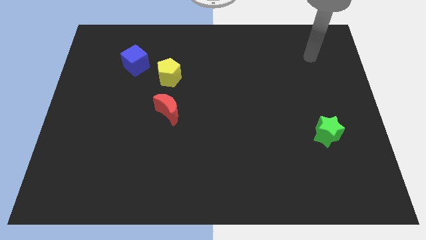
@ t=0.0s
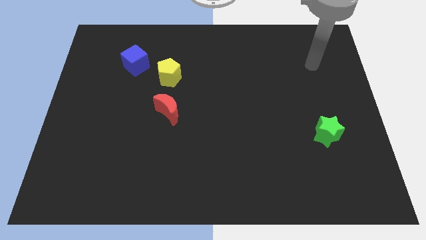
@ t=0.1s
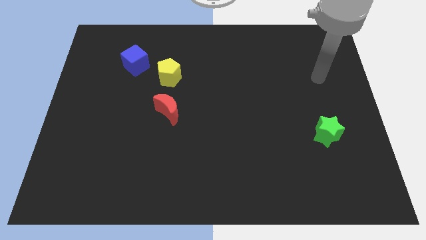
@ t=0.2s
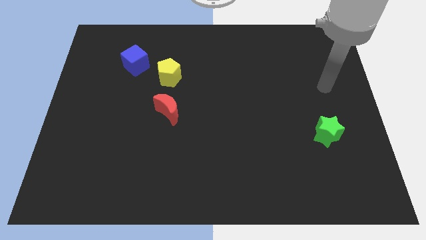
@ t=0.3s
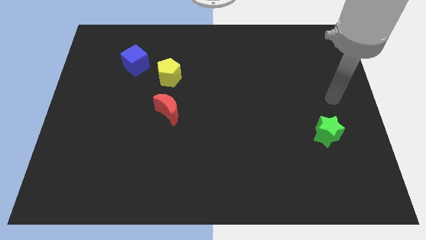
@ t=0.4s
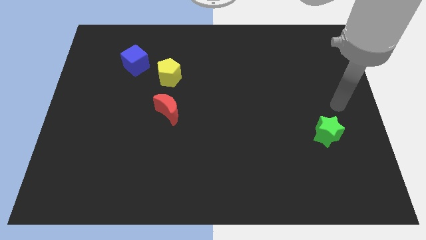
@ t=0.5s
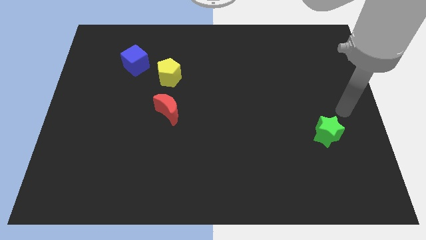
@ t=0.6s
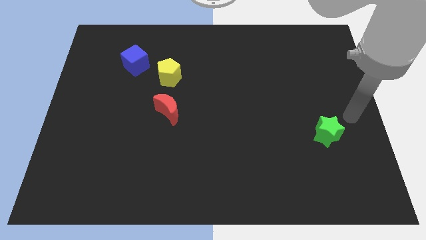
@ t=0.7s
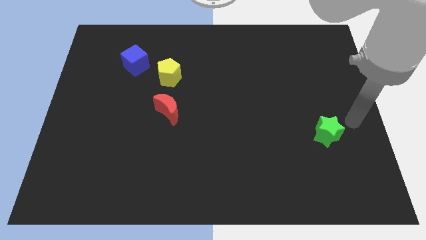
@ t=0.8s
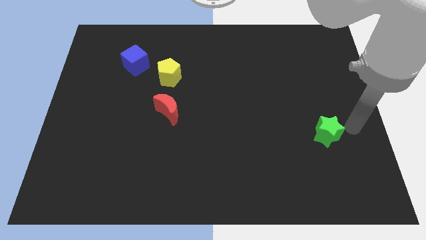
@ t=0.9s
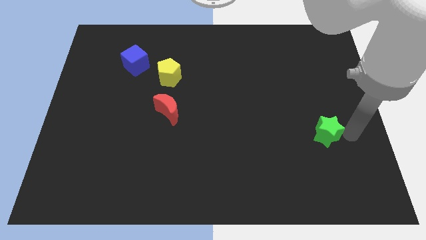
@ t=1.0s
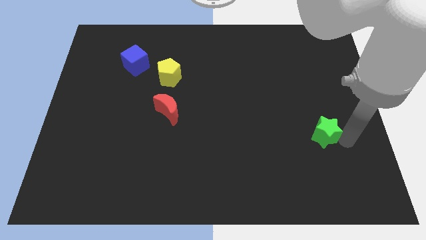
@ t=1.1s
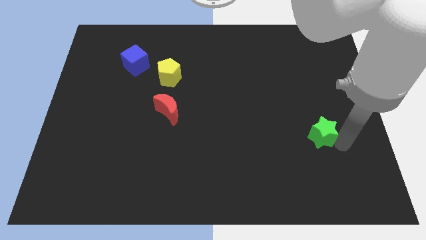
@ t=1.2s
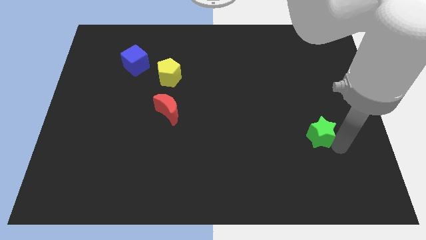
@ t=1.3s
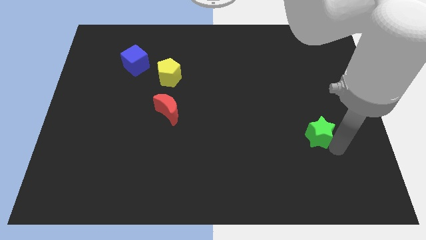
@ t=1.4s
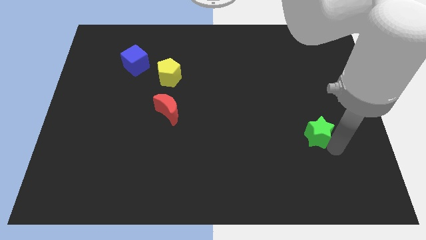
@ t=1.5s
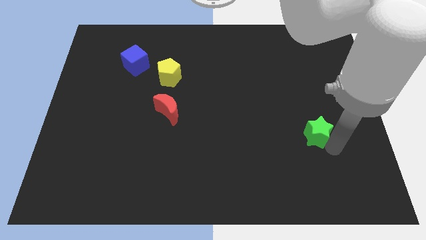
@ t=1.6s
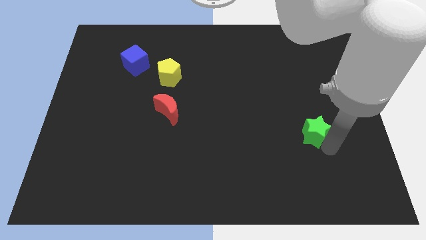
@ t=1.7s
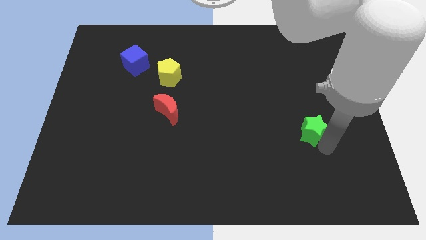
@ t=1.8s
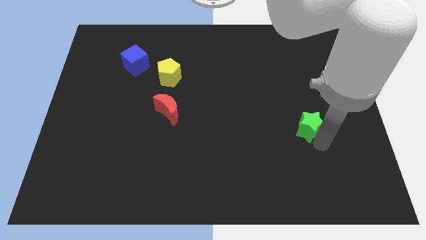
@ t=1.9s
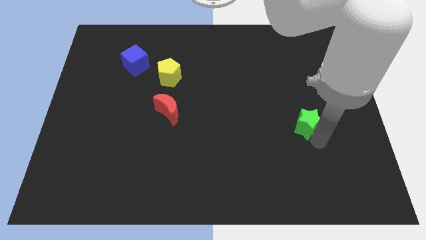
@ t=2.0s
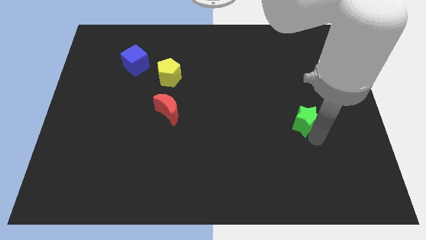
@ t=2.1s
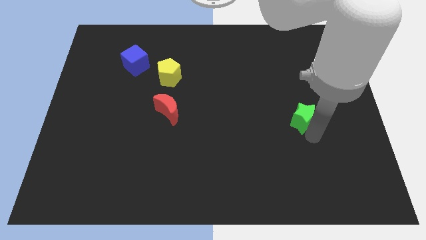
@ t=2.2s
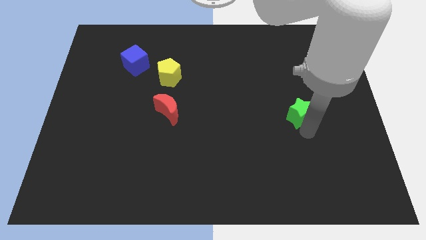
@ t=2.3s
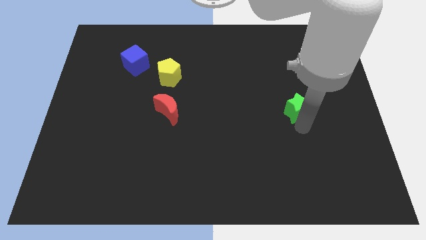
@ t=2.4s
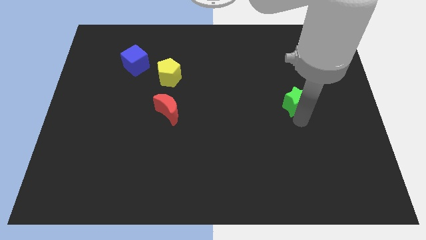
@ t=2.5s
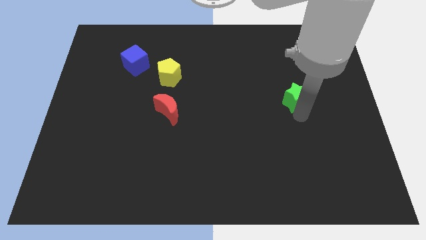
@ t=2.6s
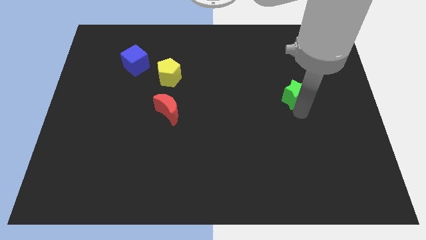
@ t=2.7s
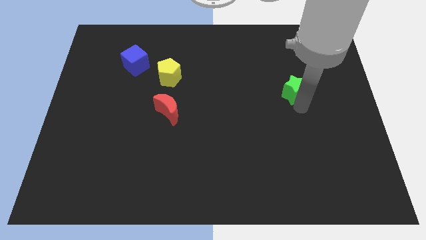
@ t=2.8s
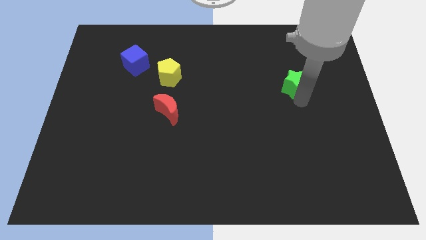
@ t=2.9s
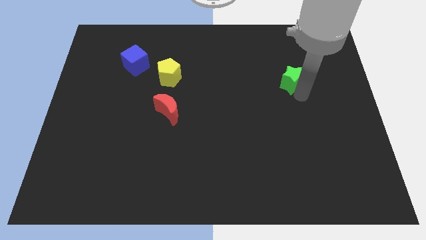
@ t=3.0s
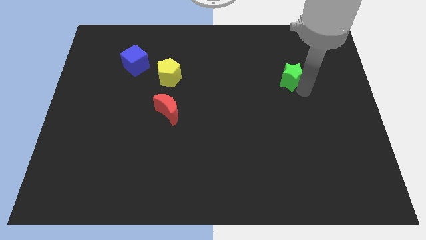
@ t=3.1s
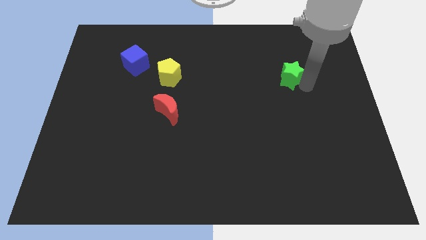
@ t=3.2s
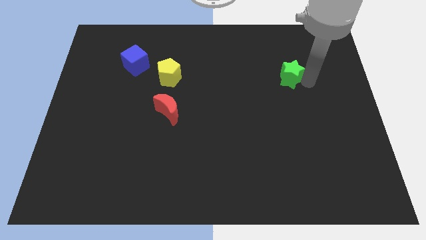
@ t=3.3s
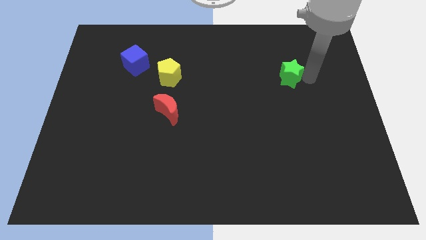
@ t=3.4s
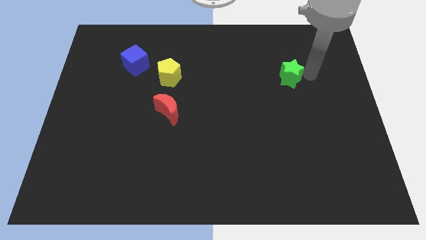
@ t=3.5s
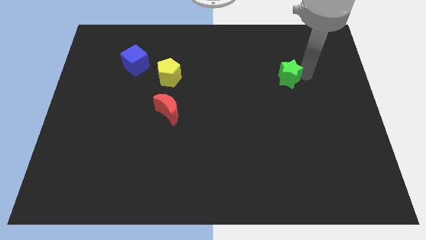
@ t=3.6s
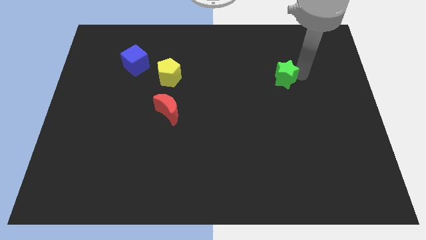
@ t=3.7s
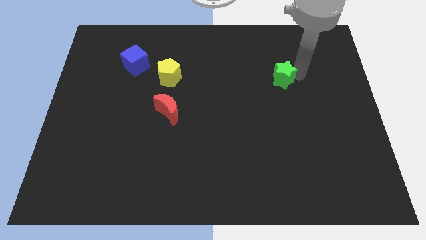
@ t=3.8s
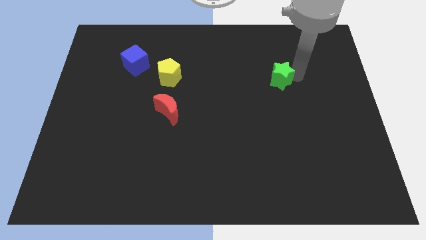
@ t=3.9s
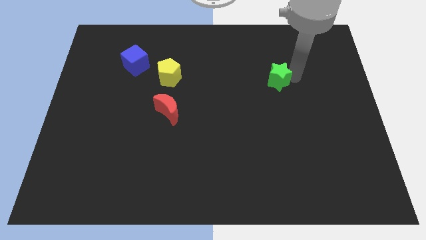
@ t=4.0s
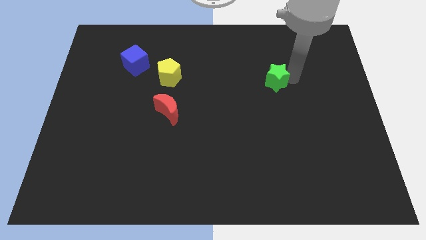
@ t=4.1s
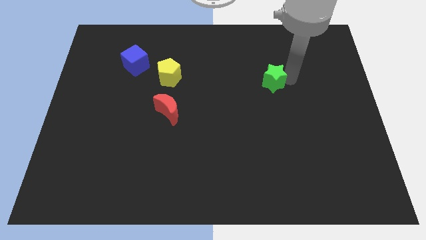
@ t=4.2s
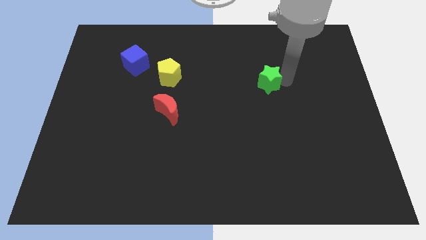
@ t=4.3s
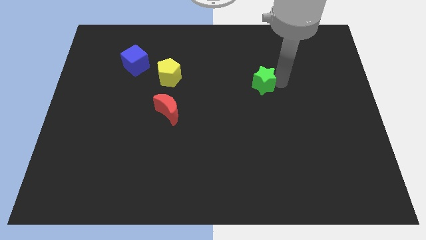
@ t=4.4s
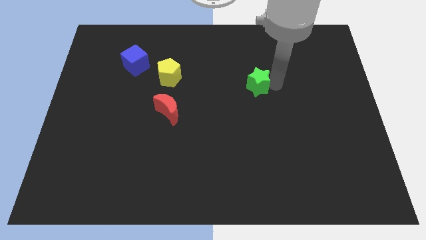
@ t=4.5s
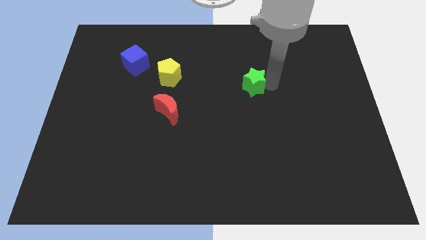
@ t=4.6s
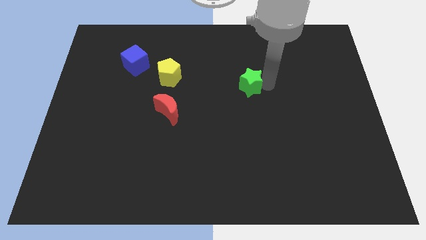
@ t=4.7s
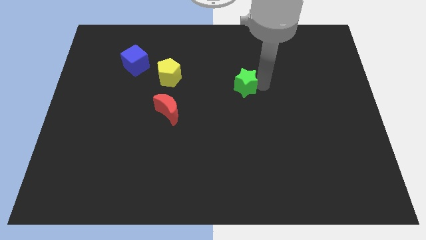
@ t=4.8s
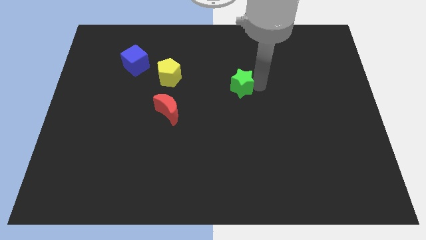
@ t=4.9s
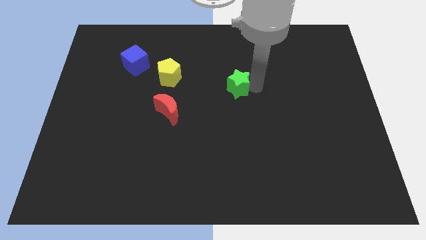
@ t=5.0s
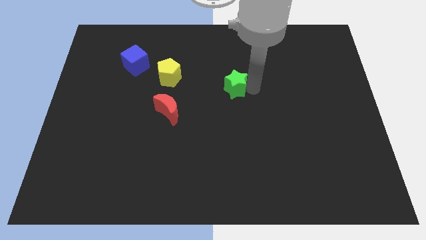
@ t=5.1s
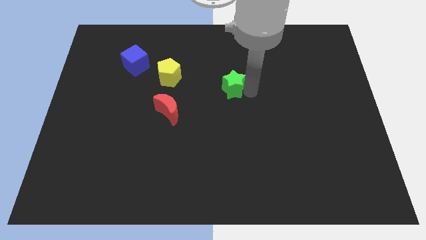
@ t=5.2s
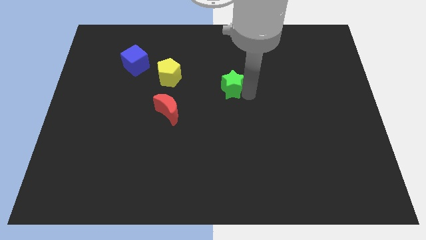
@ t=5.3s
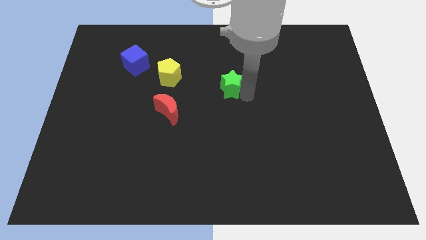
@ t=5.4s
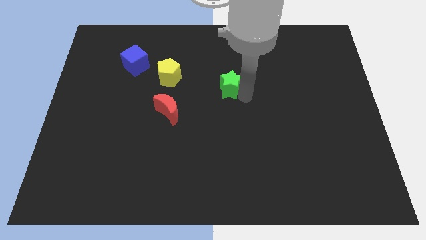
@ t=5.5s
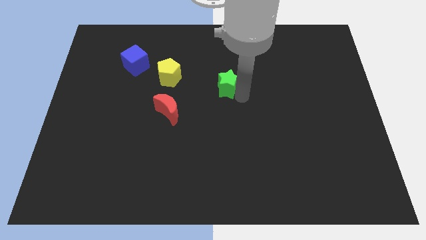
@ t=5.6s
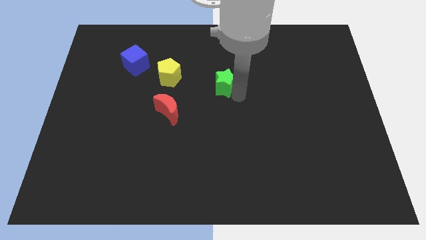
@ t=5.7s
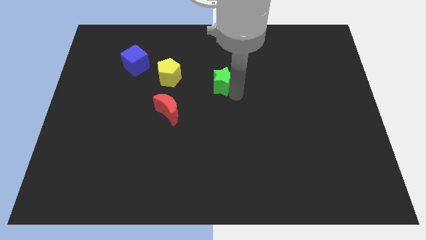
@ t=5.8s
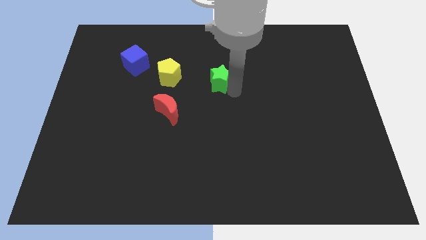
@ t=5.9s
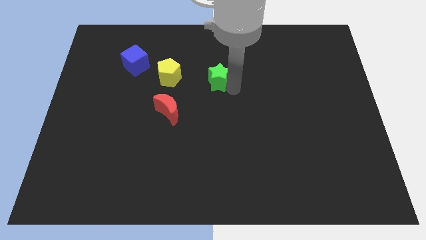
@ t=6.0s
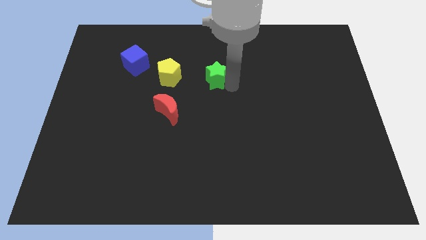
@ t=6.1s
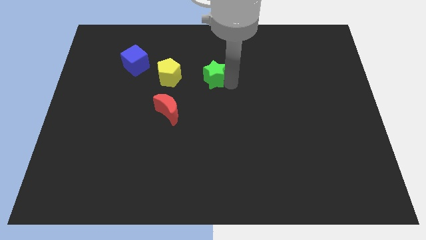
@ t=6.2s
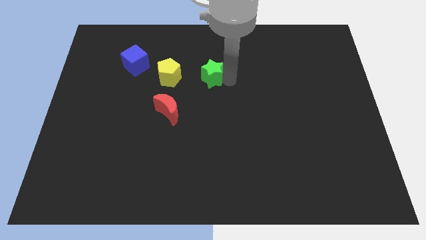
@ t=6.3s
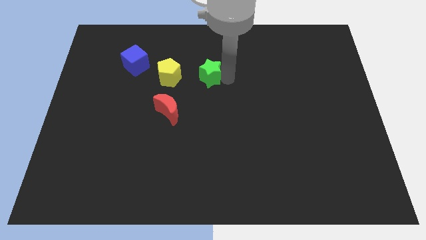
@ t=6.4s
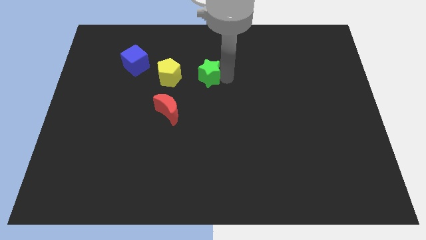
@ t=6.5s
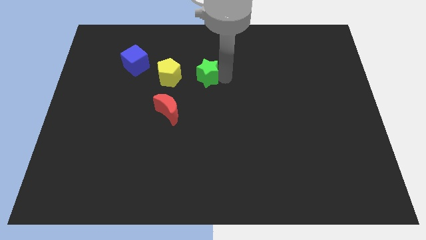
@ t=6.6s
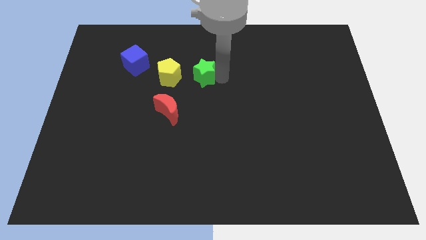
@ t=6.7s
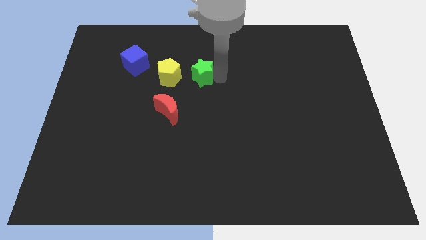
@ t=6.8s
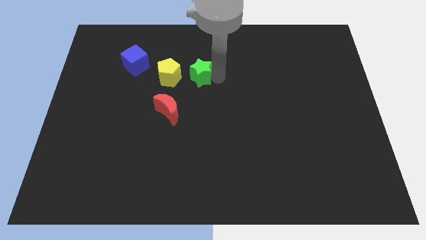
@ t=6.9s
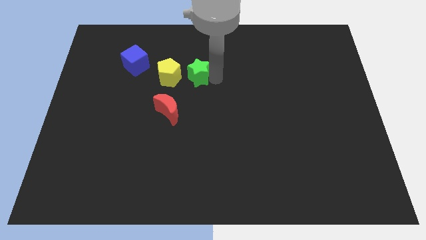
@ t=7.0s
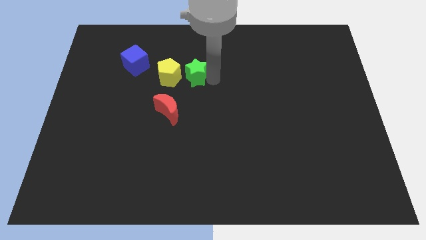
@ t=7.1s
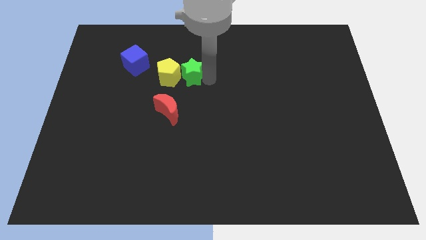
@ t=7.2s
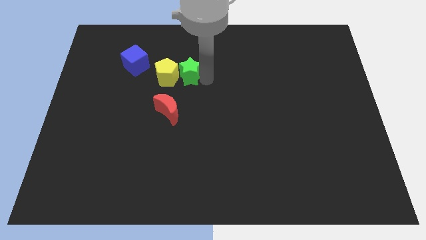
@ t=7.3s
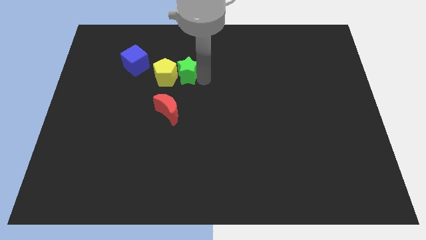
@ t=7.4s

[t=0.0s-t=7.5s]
put the green star close to the yellow pentagon

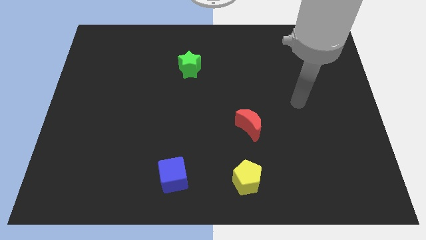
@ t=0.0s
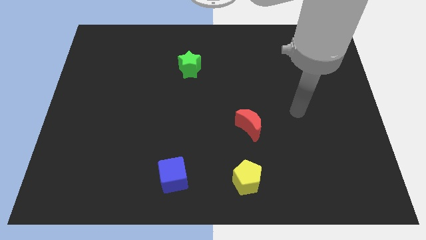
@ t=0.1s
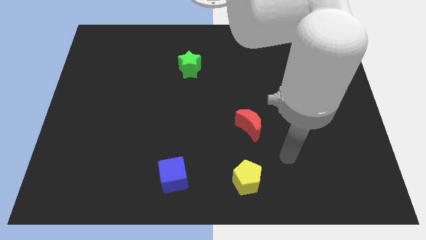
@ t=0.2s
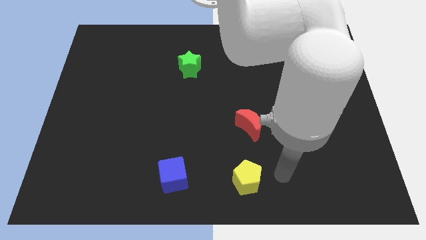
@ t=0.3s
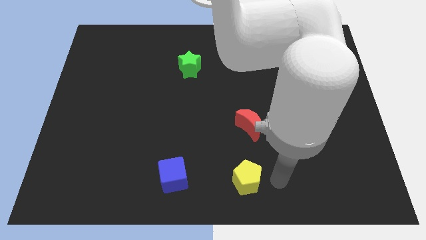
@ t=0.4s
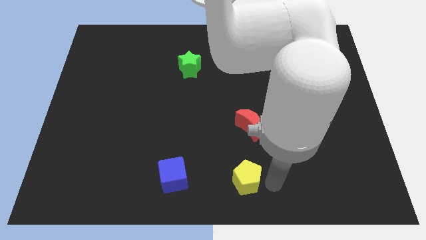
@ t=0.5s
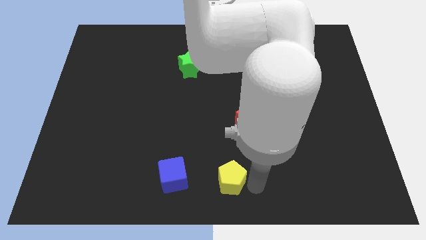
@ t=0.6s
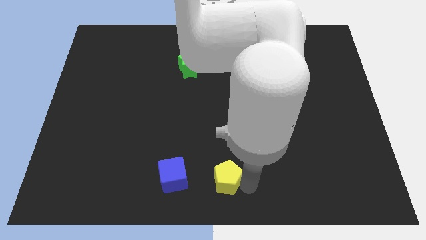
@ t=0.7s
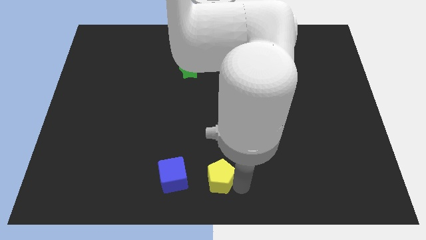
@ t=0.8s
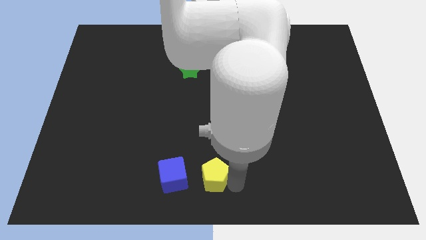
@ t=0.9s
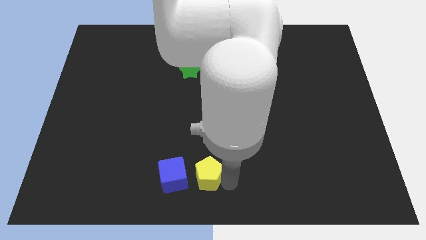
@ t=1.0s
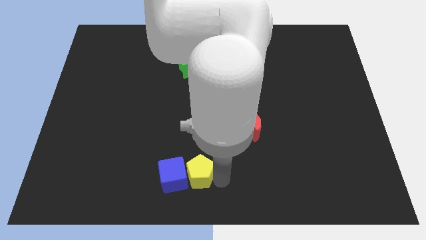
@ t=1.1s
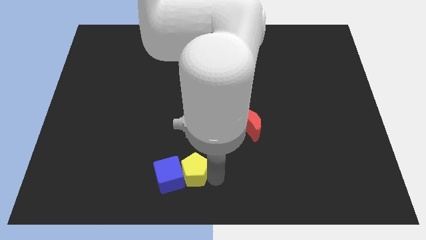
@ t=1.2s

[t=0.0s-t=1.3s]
move the yellow pentagon towards the cube
